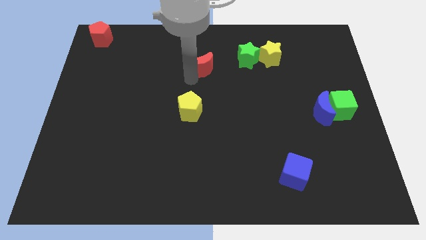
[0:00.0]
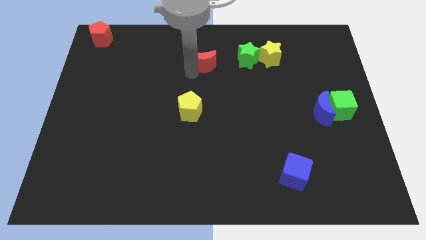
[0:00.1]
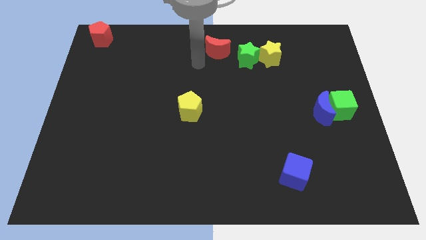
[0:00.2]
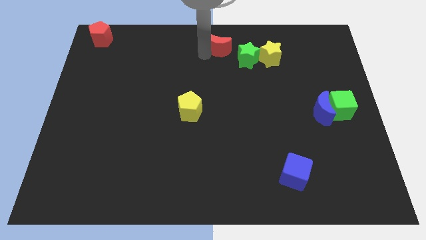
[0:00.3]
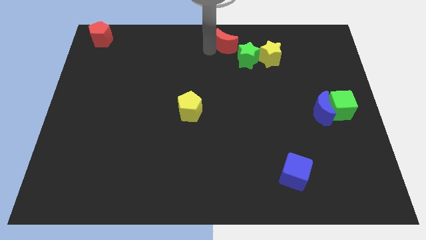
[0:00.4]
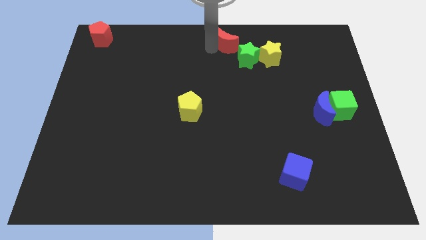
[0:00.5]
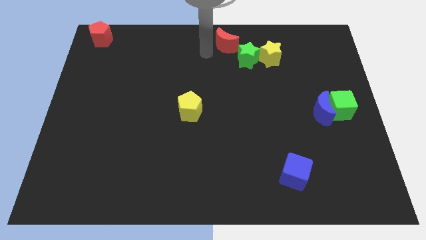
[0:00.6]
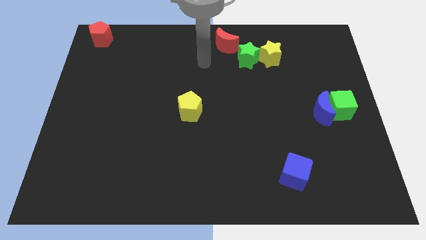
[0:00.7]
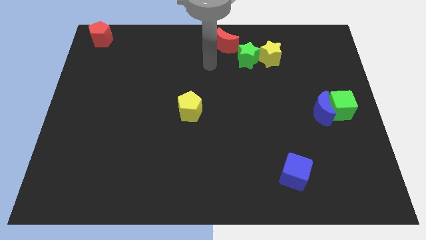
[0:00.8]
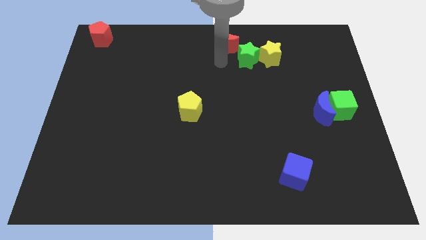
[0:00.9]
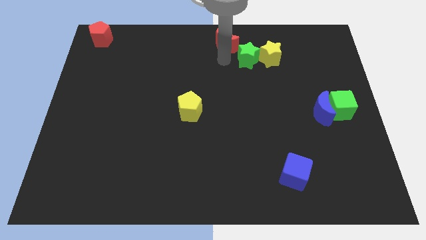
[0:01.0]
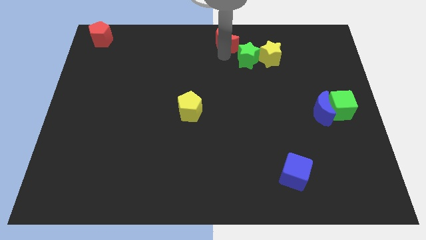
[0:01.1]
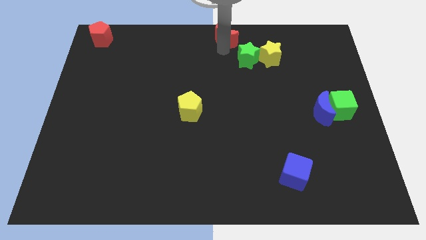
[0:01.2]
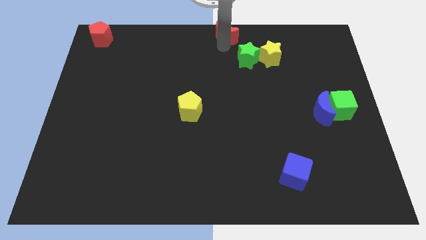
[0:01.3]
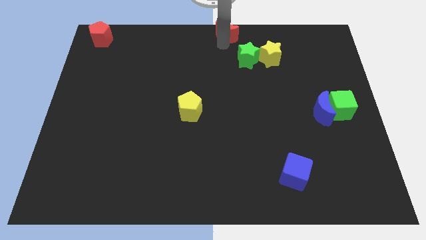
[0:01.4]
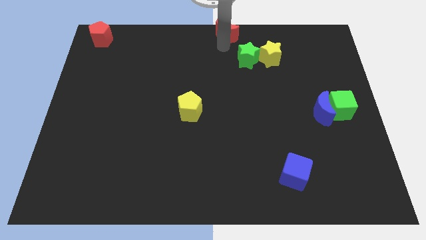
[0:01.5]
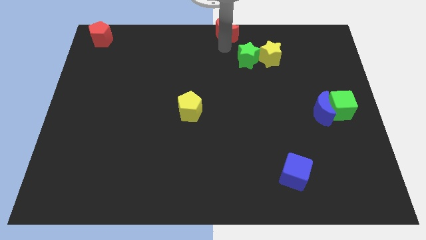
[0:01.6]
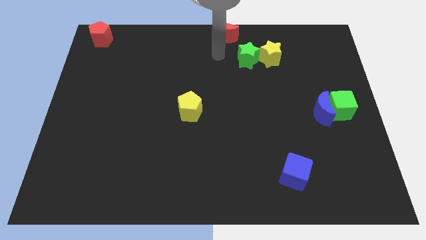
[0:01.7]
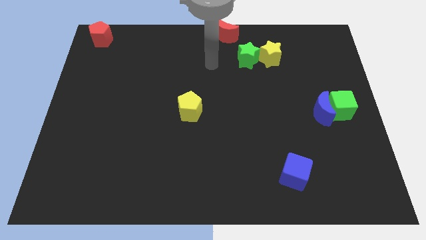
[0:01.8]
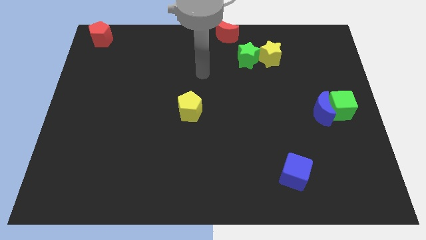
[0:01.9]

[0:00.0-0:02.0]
move the red moon to the top middle of the board

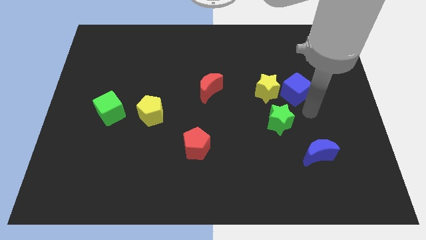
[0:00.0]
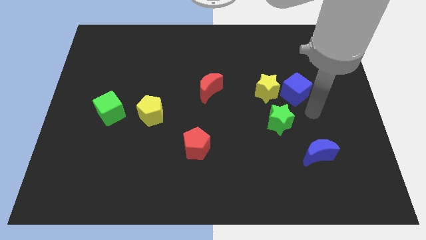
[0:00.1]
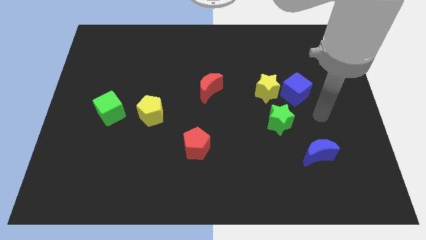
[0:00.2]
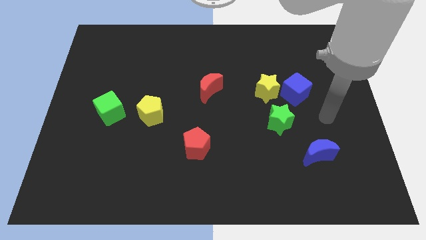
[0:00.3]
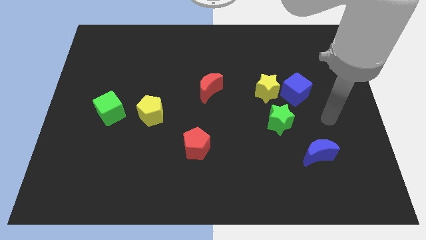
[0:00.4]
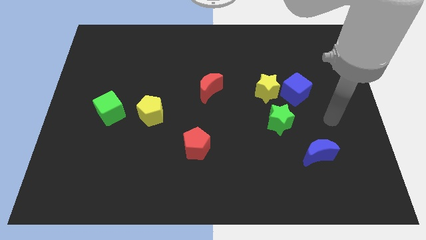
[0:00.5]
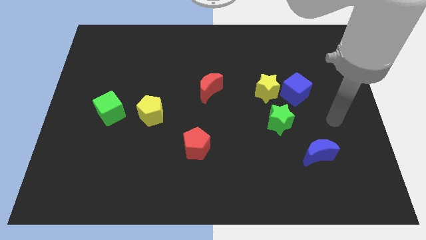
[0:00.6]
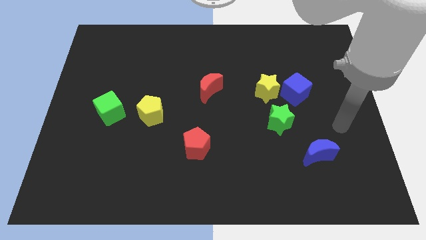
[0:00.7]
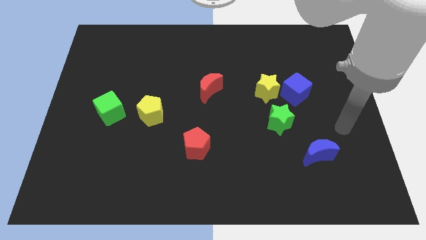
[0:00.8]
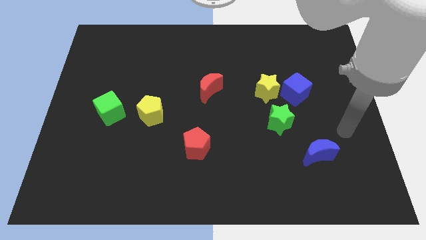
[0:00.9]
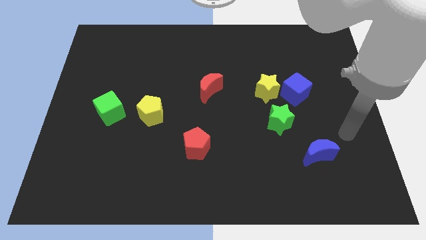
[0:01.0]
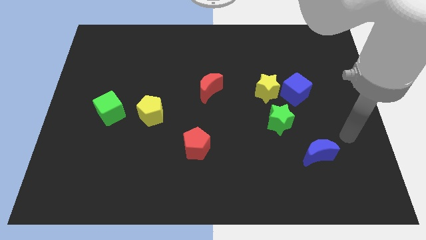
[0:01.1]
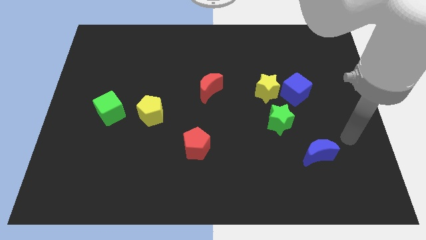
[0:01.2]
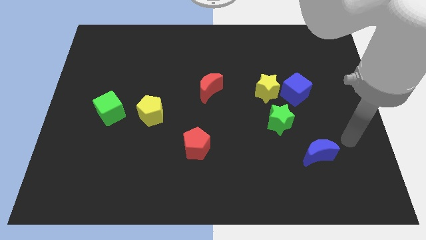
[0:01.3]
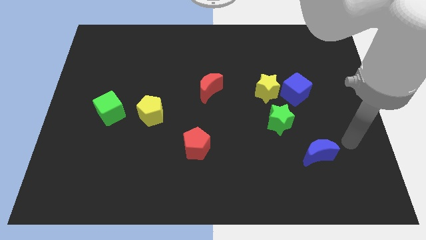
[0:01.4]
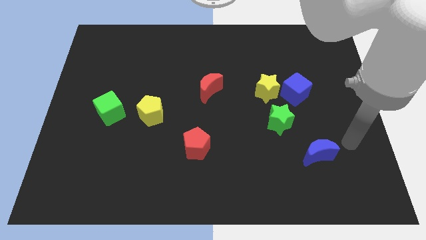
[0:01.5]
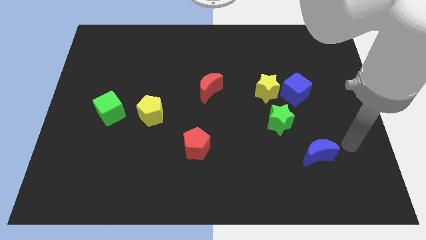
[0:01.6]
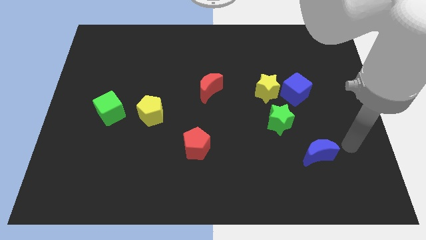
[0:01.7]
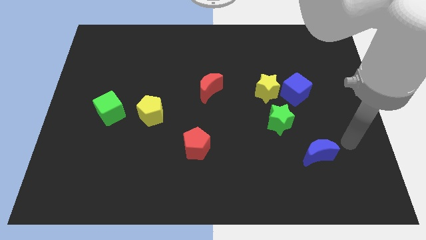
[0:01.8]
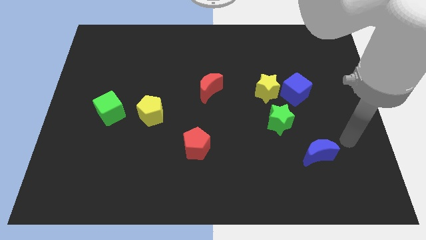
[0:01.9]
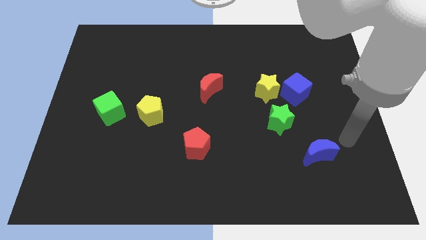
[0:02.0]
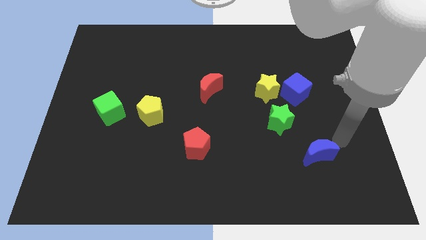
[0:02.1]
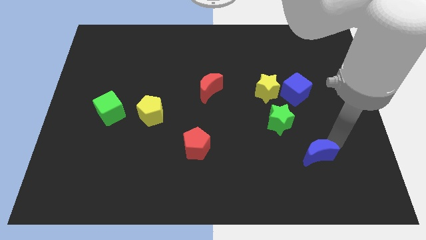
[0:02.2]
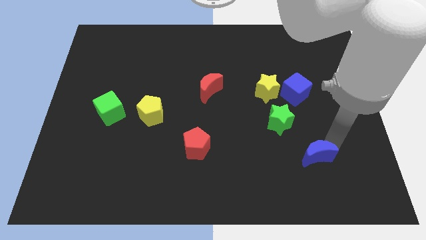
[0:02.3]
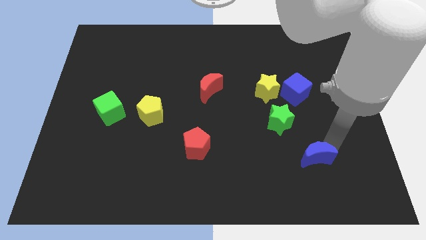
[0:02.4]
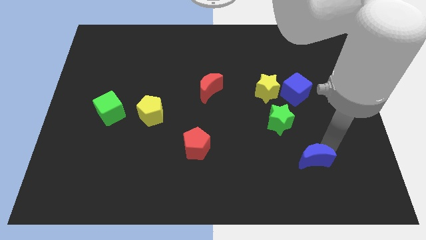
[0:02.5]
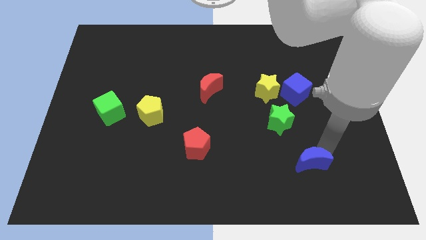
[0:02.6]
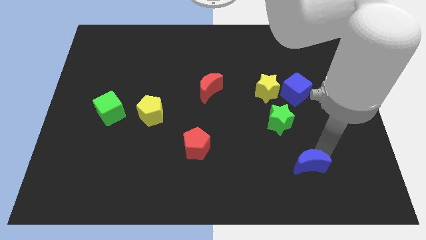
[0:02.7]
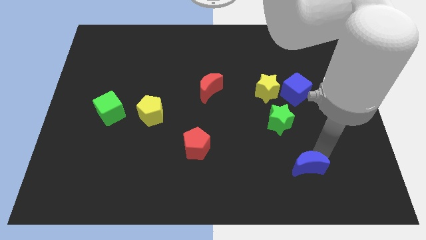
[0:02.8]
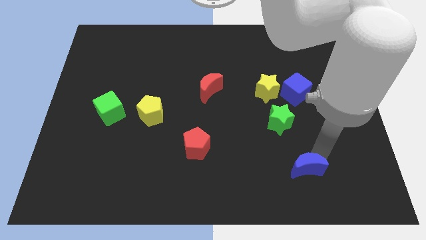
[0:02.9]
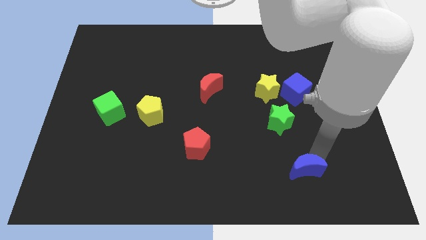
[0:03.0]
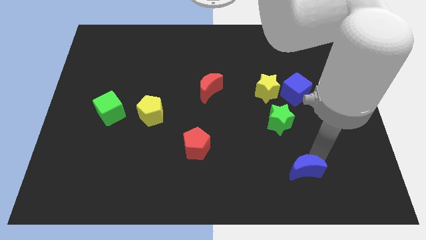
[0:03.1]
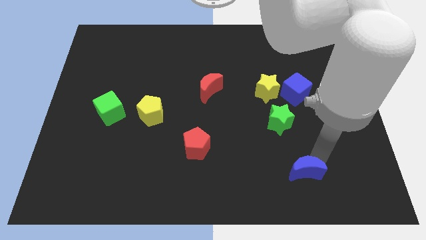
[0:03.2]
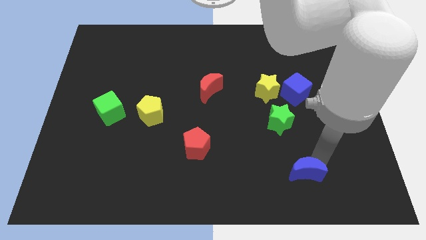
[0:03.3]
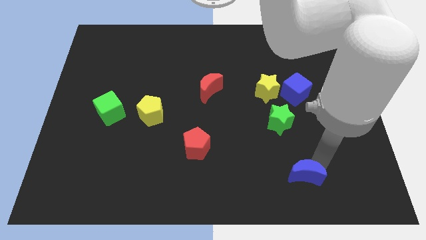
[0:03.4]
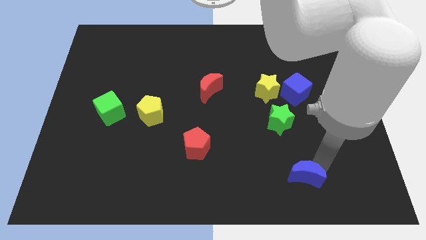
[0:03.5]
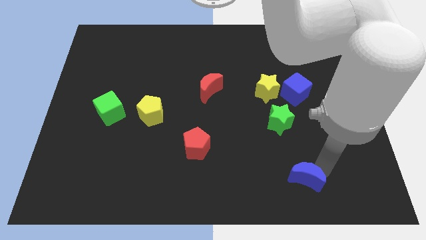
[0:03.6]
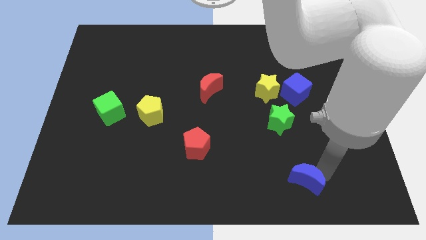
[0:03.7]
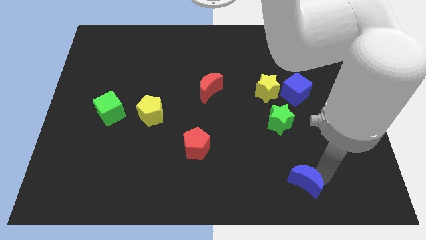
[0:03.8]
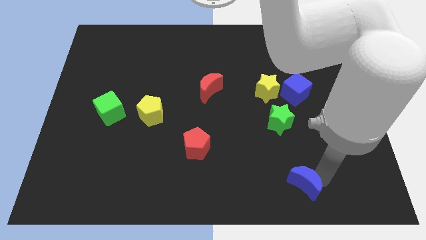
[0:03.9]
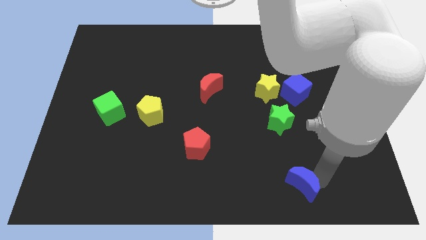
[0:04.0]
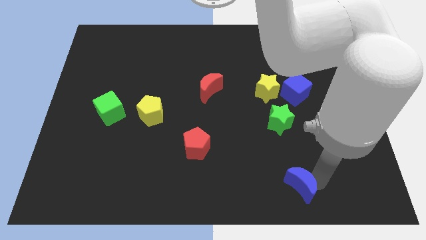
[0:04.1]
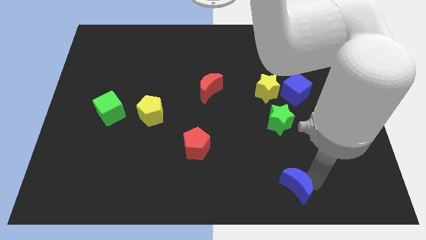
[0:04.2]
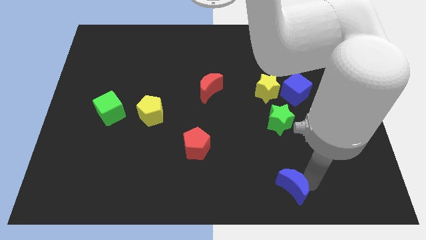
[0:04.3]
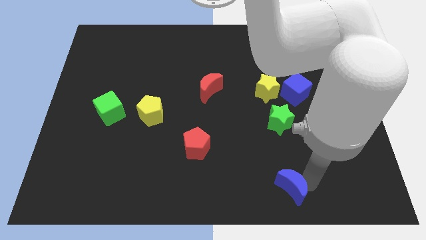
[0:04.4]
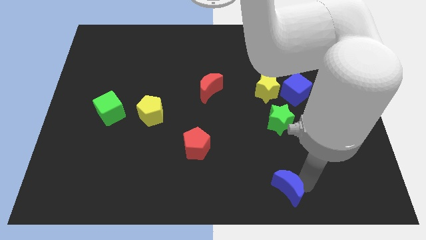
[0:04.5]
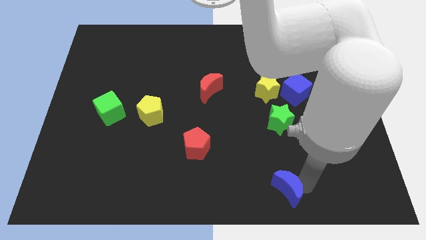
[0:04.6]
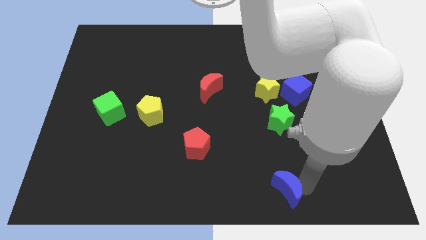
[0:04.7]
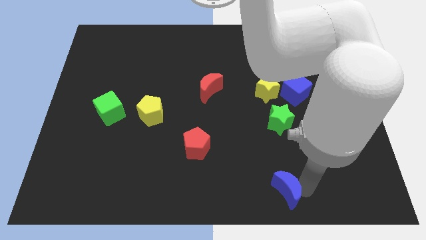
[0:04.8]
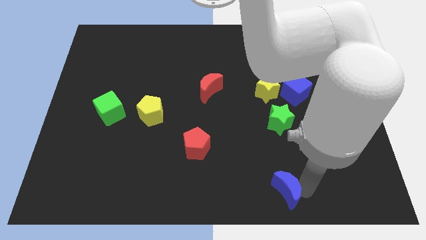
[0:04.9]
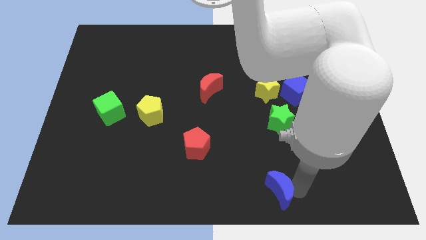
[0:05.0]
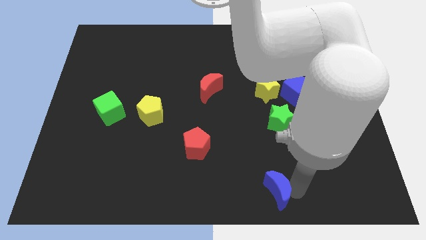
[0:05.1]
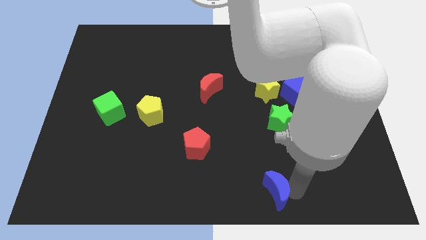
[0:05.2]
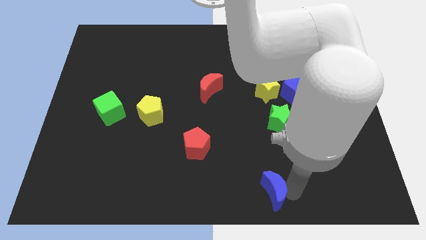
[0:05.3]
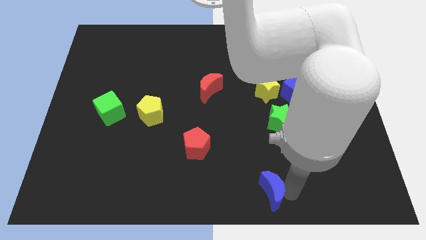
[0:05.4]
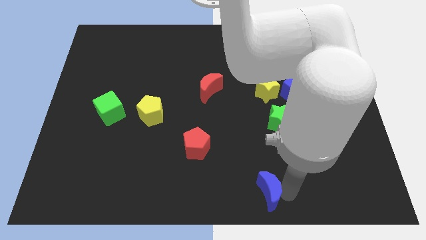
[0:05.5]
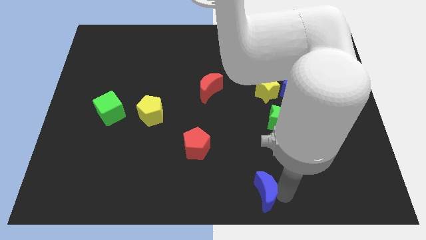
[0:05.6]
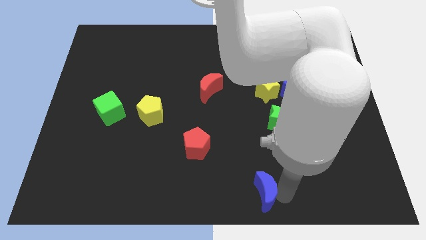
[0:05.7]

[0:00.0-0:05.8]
push the blue crescent to the left of the board

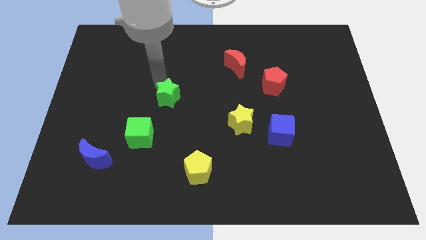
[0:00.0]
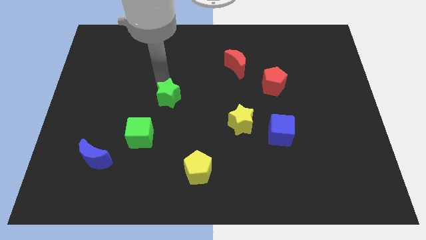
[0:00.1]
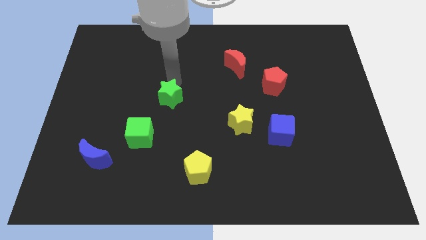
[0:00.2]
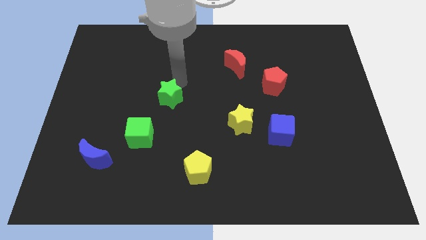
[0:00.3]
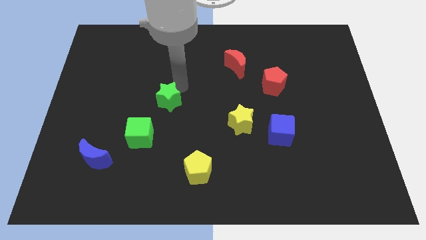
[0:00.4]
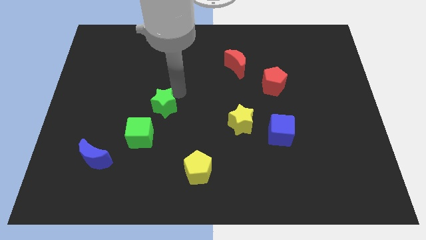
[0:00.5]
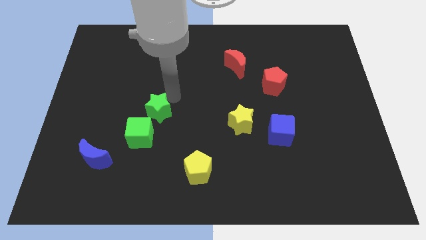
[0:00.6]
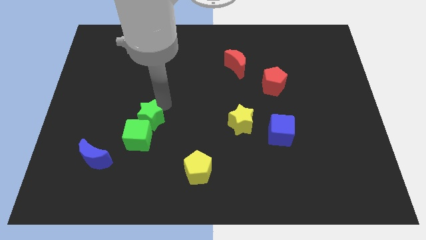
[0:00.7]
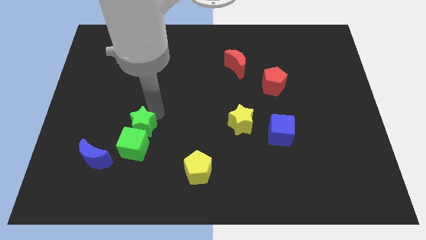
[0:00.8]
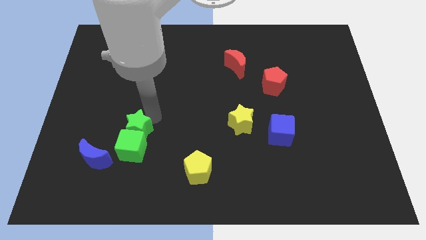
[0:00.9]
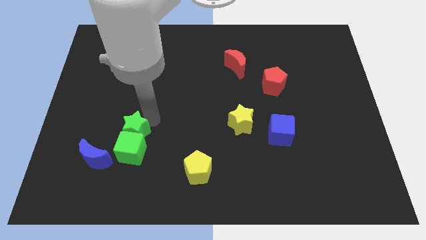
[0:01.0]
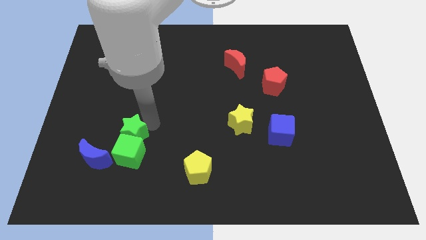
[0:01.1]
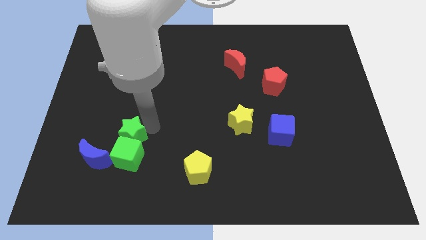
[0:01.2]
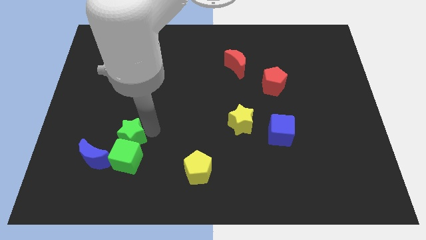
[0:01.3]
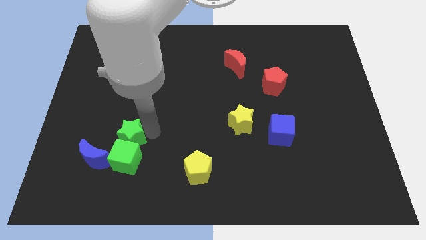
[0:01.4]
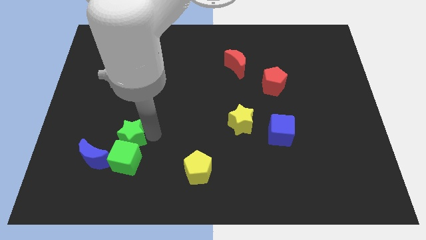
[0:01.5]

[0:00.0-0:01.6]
push the green star into the green cube
